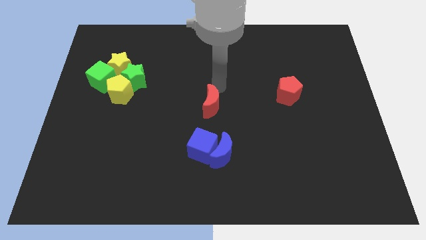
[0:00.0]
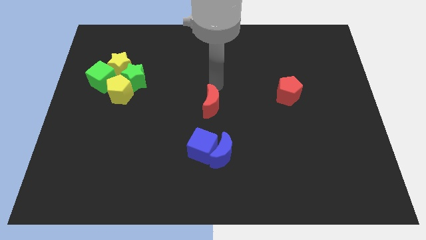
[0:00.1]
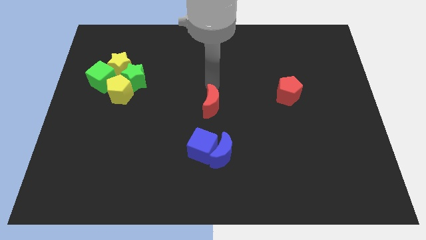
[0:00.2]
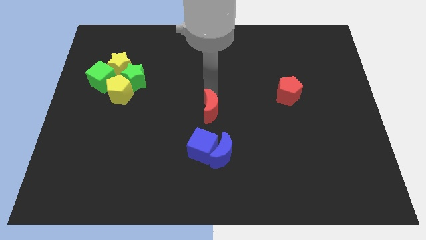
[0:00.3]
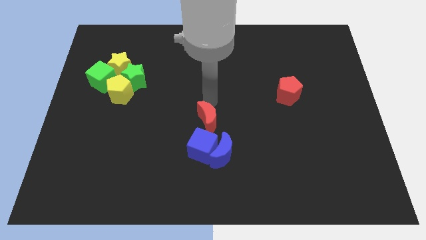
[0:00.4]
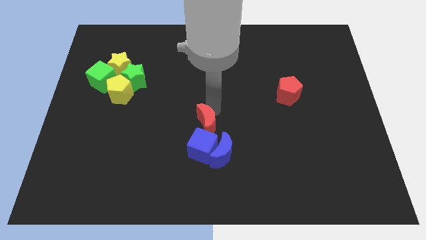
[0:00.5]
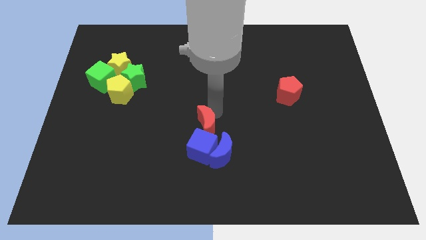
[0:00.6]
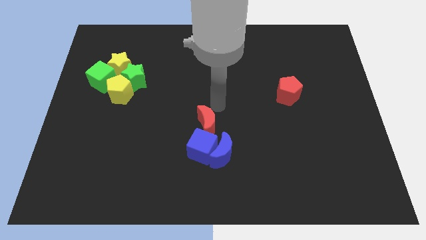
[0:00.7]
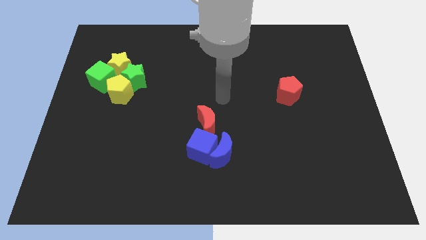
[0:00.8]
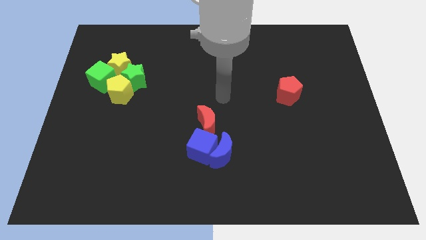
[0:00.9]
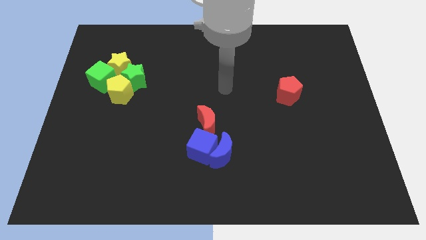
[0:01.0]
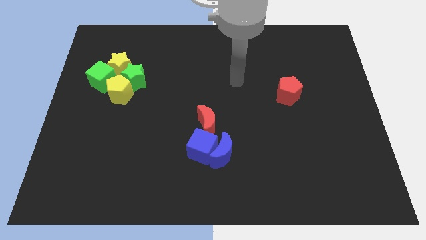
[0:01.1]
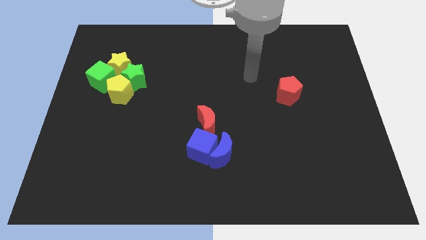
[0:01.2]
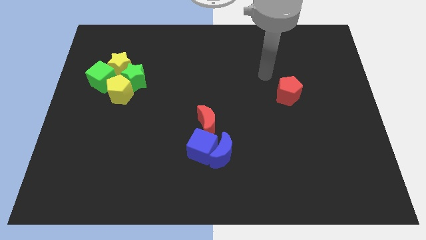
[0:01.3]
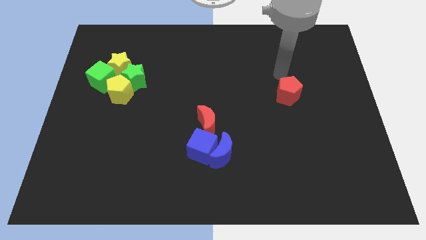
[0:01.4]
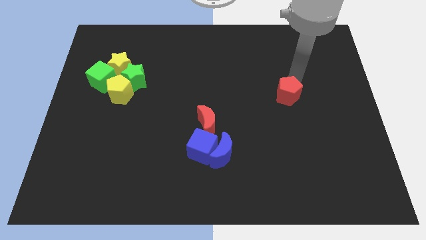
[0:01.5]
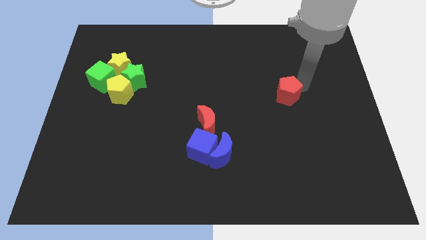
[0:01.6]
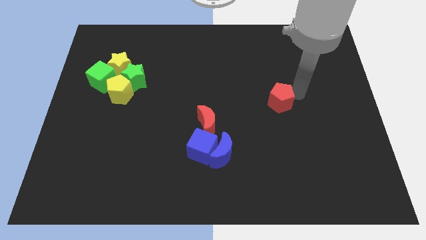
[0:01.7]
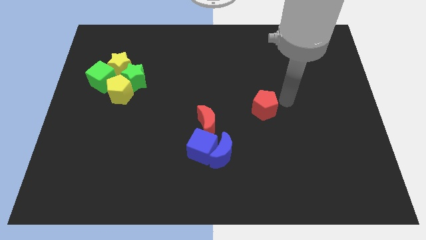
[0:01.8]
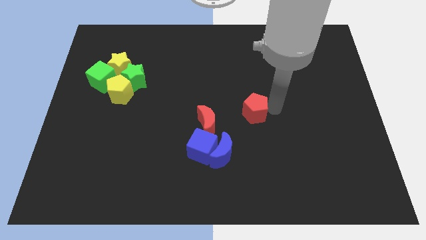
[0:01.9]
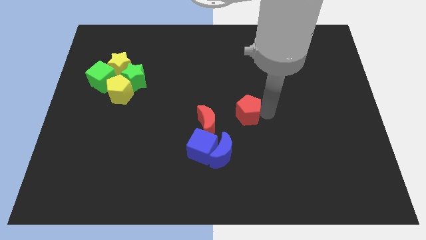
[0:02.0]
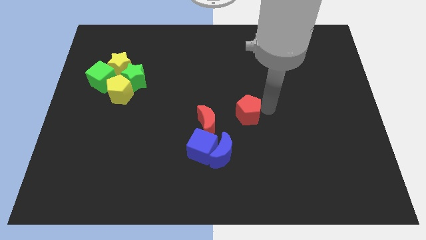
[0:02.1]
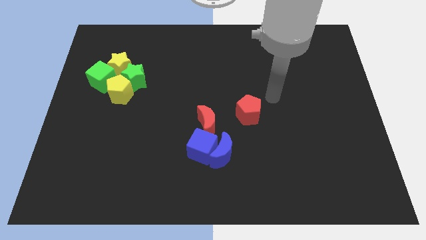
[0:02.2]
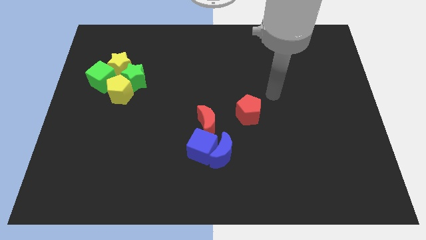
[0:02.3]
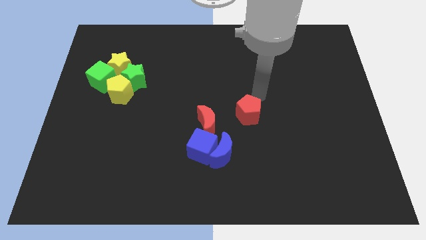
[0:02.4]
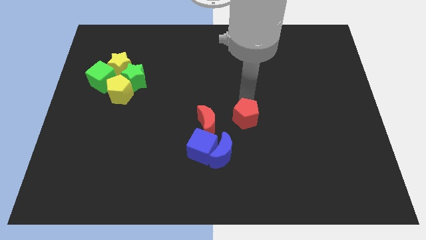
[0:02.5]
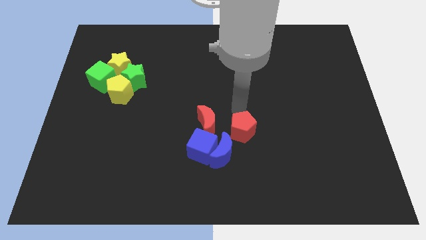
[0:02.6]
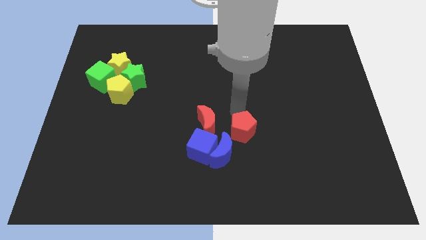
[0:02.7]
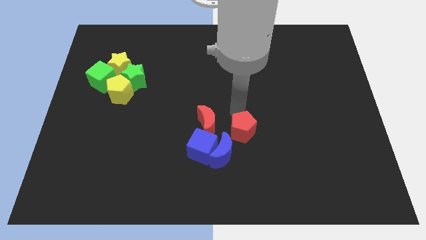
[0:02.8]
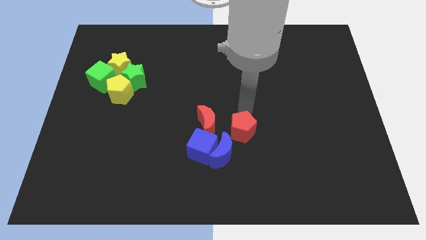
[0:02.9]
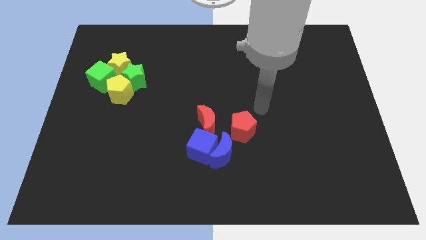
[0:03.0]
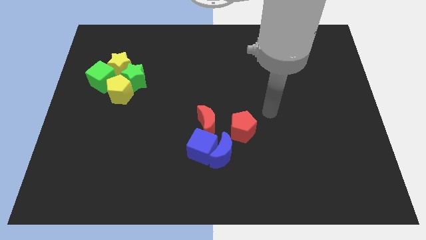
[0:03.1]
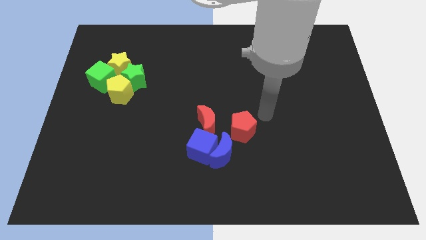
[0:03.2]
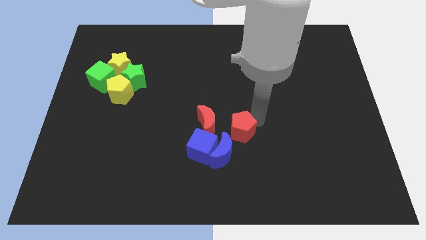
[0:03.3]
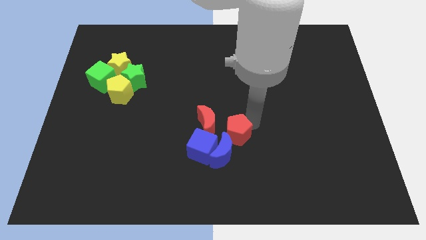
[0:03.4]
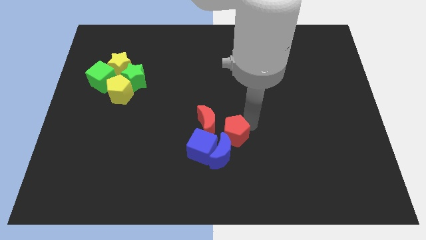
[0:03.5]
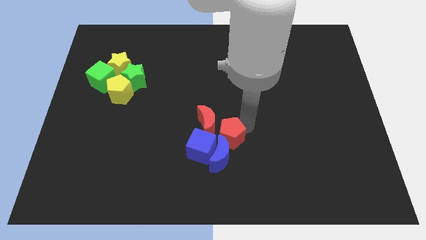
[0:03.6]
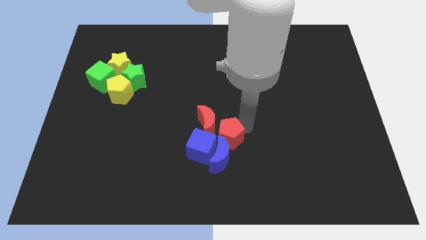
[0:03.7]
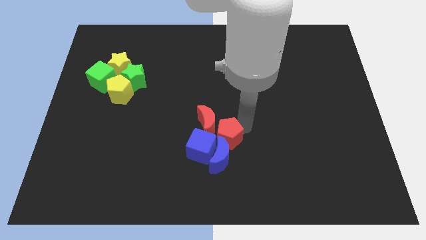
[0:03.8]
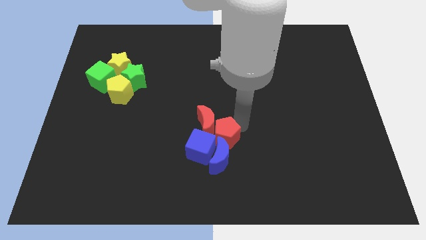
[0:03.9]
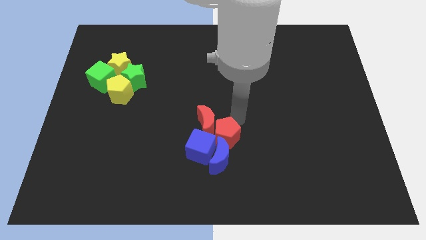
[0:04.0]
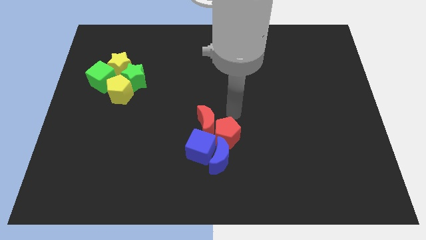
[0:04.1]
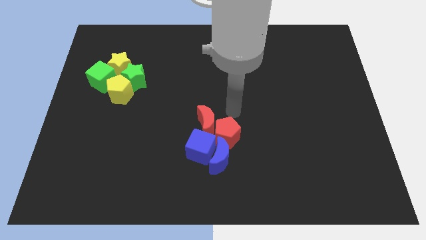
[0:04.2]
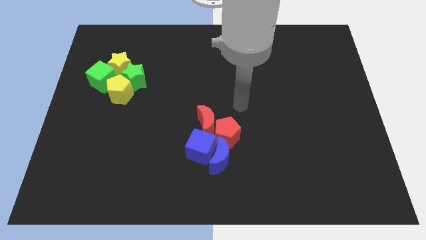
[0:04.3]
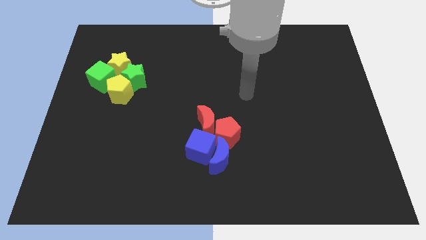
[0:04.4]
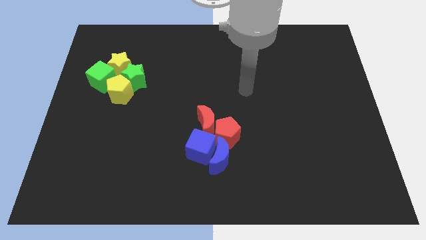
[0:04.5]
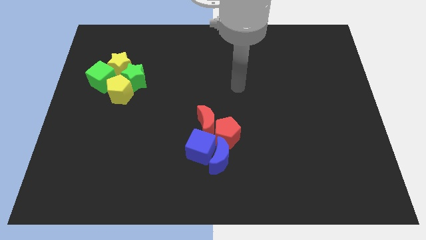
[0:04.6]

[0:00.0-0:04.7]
push the red blocks into the group of blue blocks

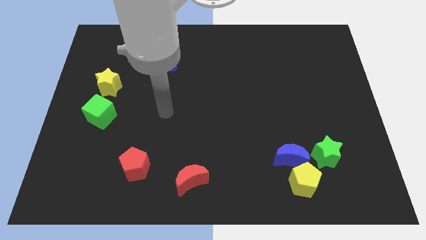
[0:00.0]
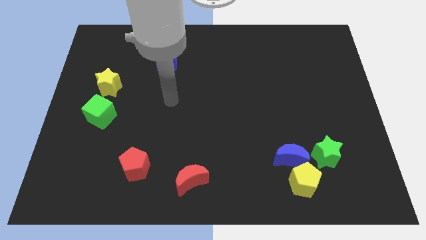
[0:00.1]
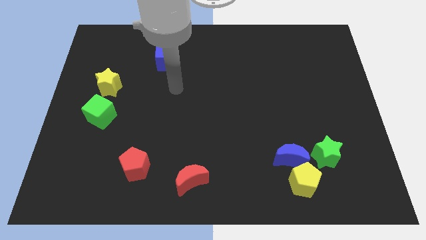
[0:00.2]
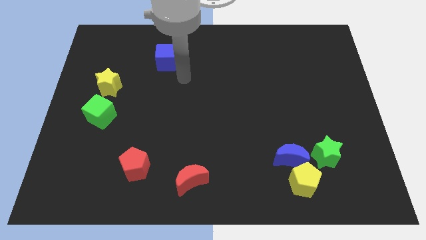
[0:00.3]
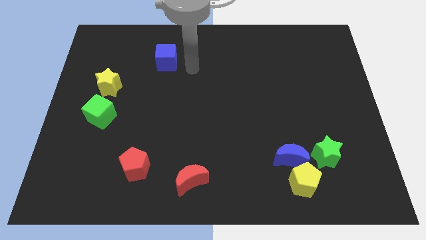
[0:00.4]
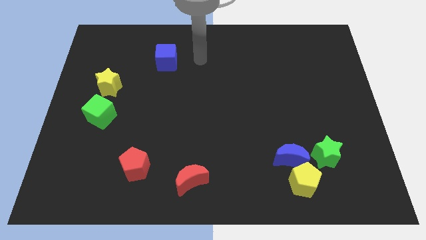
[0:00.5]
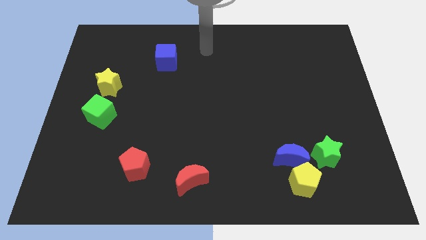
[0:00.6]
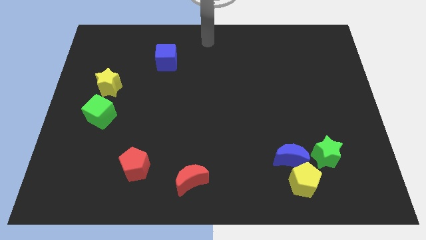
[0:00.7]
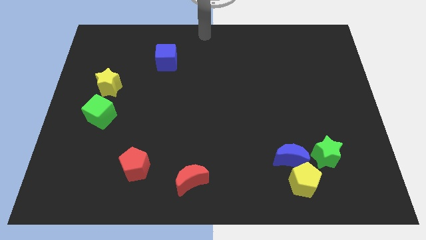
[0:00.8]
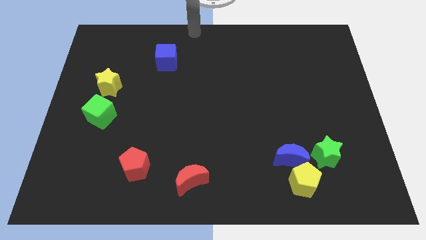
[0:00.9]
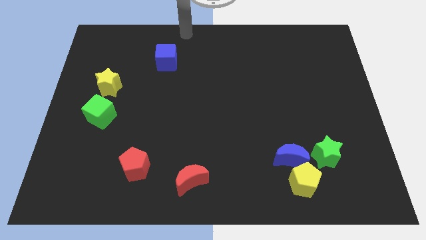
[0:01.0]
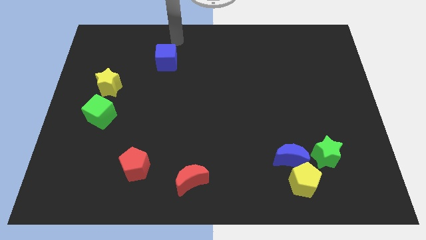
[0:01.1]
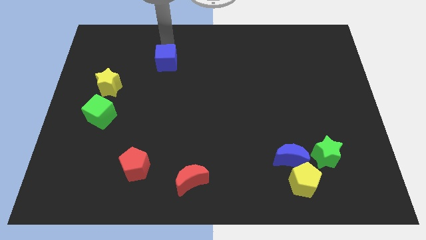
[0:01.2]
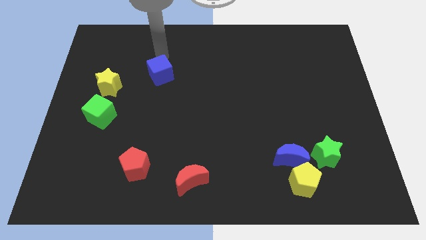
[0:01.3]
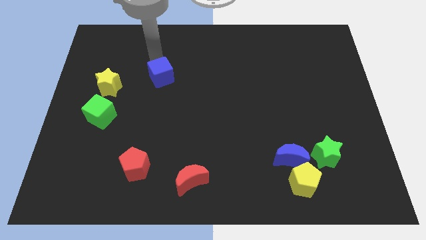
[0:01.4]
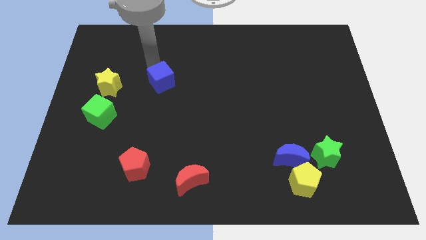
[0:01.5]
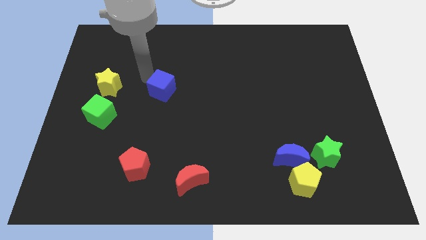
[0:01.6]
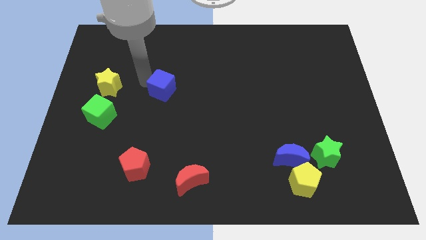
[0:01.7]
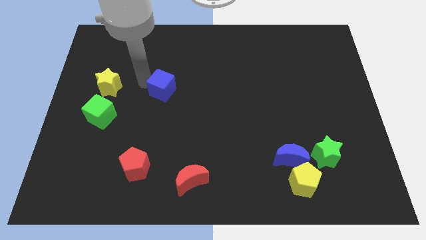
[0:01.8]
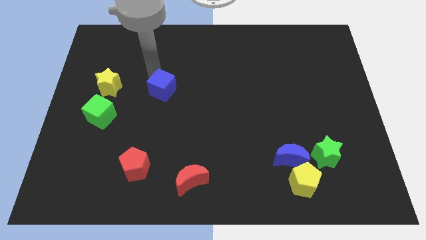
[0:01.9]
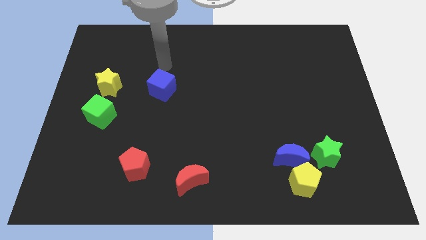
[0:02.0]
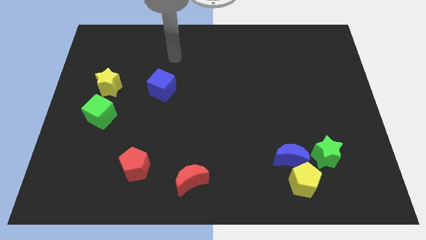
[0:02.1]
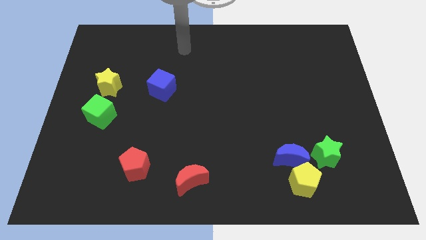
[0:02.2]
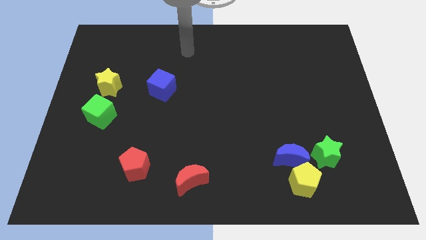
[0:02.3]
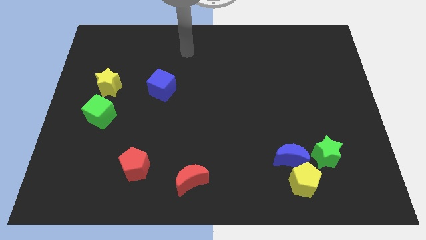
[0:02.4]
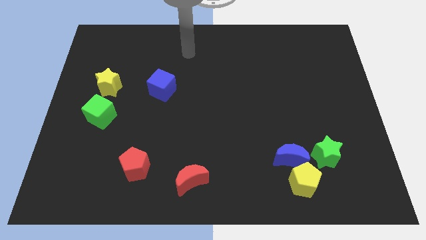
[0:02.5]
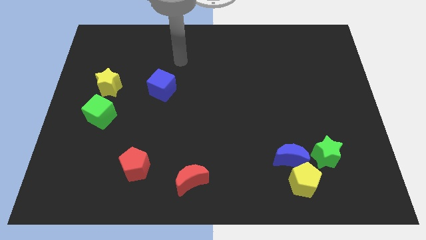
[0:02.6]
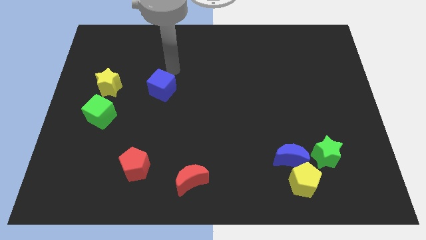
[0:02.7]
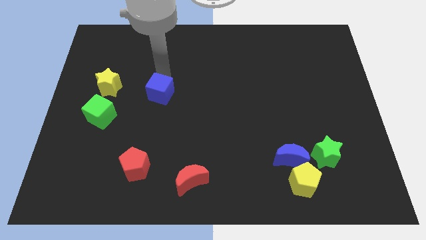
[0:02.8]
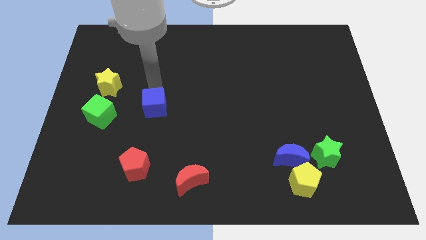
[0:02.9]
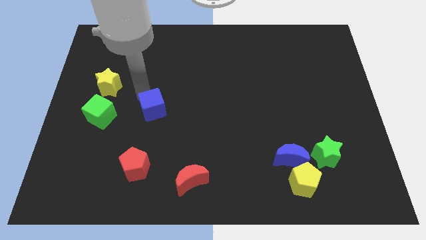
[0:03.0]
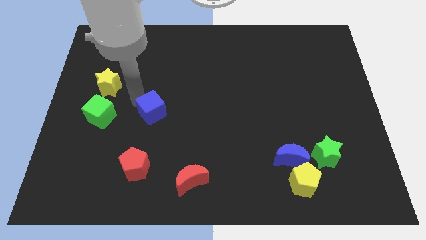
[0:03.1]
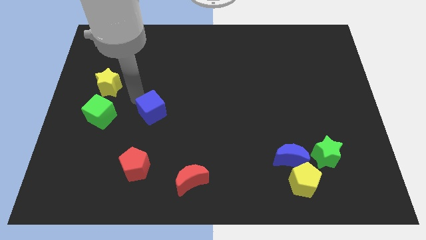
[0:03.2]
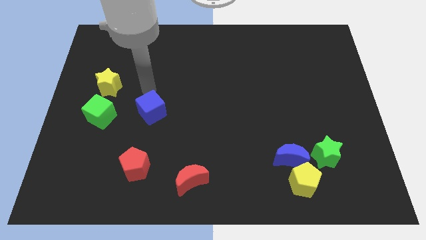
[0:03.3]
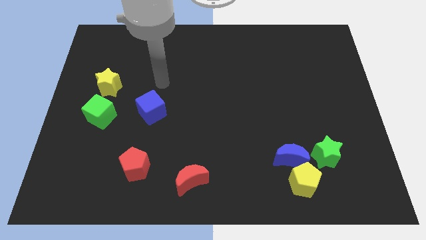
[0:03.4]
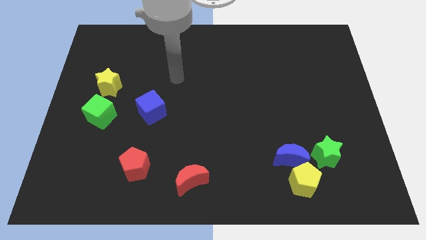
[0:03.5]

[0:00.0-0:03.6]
place blue cube to the right of green cube

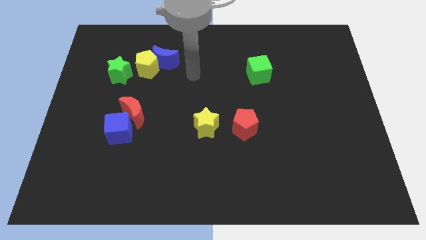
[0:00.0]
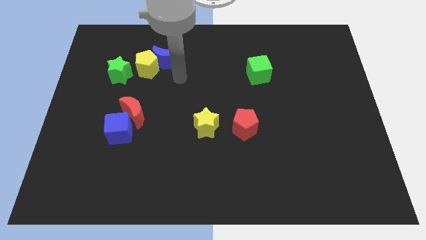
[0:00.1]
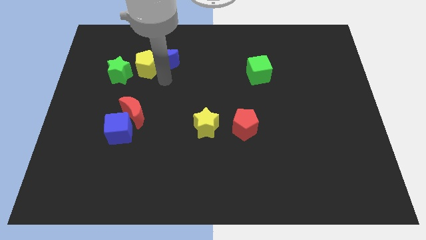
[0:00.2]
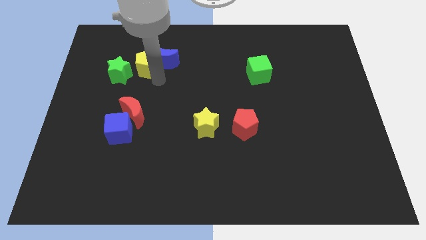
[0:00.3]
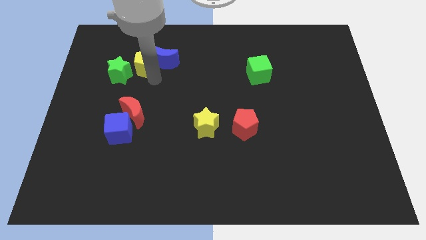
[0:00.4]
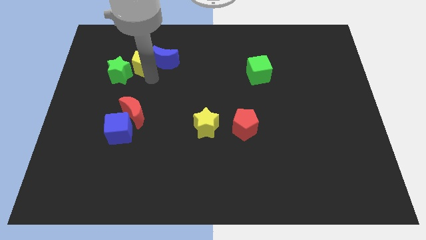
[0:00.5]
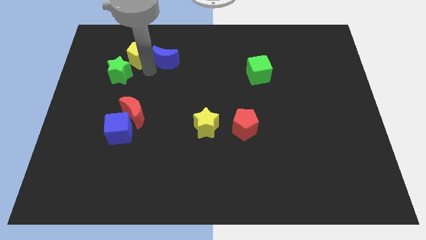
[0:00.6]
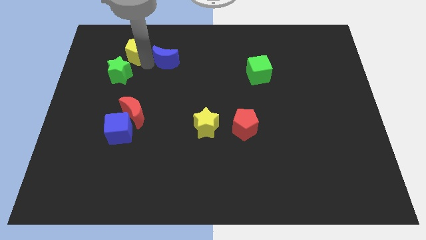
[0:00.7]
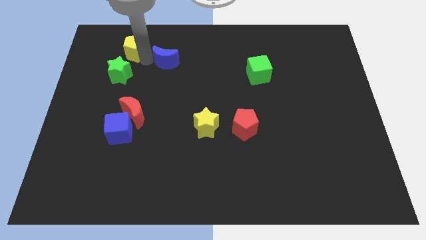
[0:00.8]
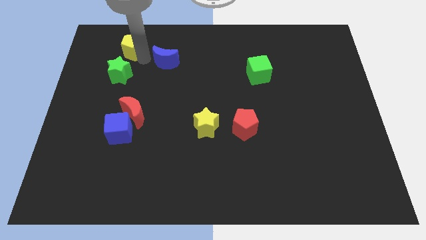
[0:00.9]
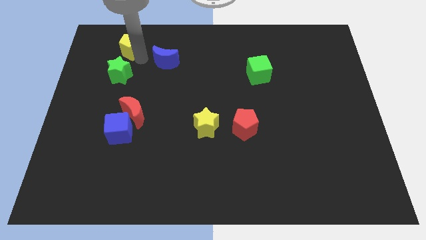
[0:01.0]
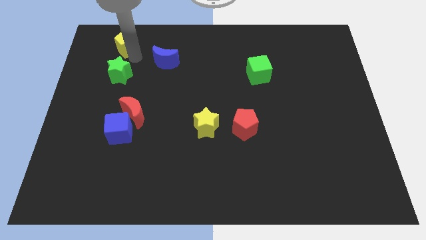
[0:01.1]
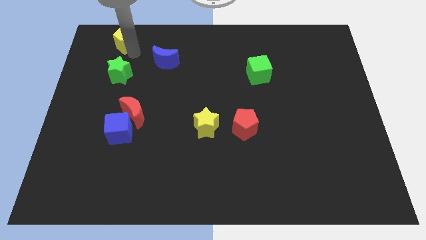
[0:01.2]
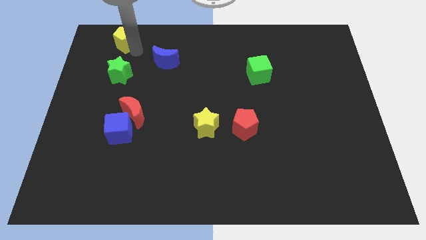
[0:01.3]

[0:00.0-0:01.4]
push the yellow pentagon to the top side of the green star
